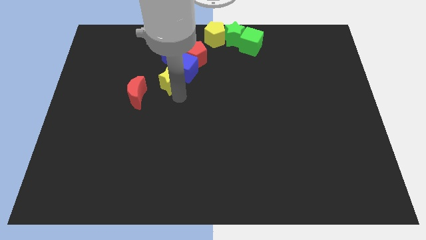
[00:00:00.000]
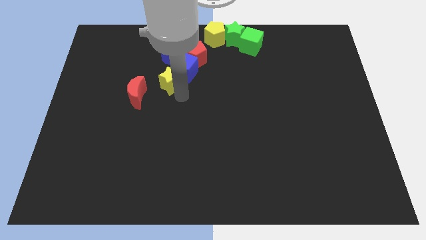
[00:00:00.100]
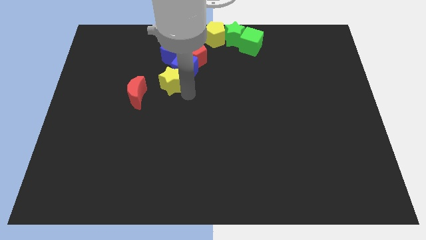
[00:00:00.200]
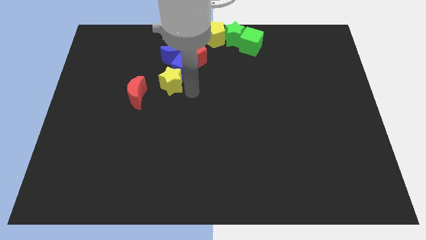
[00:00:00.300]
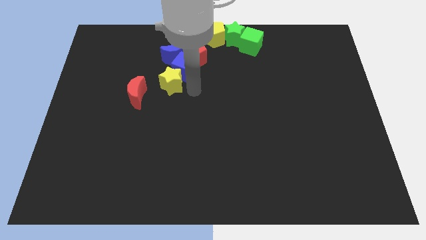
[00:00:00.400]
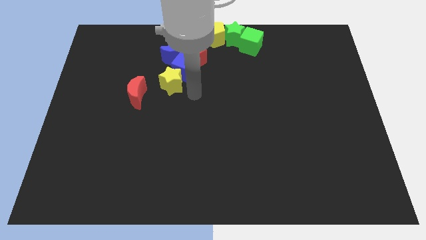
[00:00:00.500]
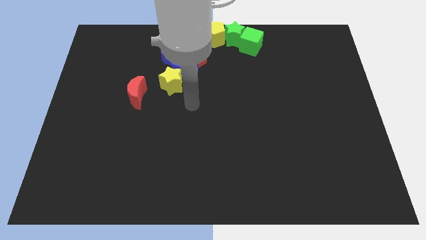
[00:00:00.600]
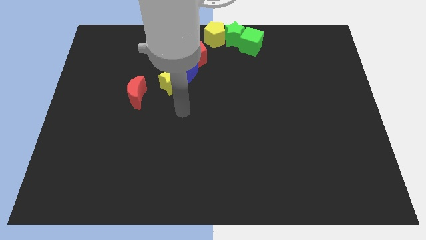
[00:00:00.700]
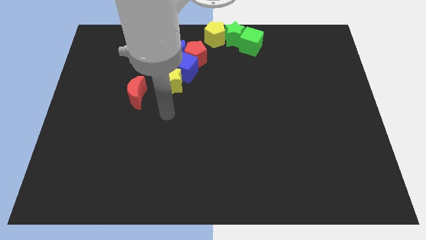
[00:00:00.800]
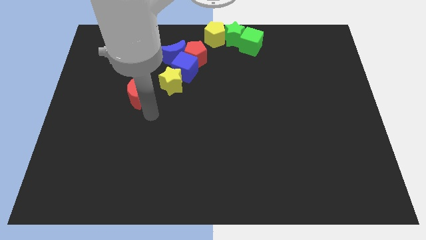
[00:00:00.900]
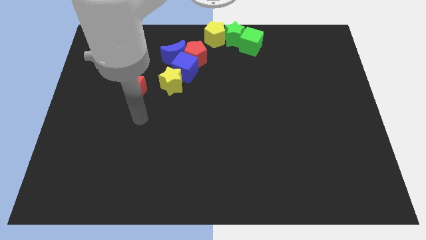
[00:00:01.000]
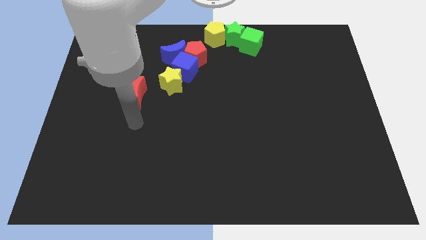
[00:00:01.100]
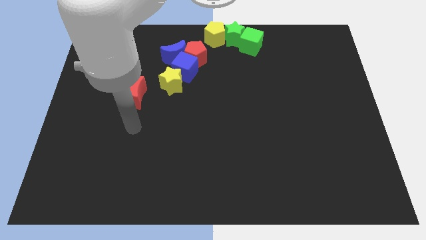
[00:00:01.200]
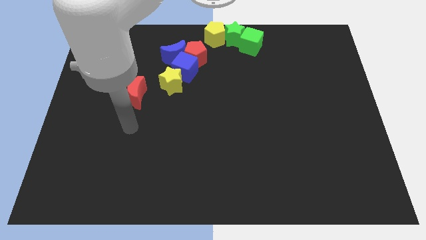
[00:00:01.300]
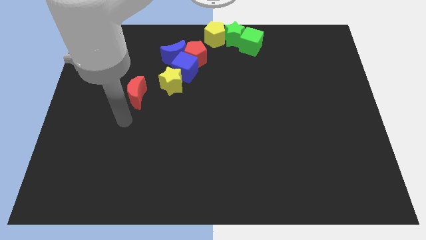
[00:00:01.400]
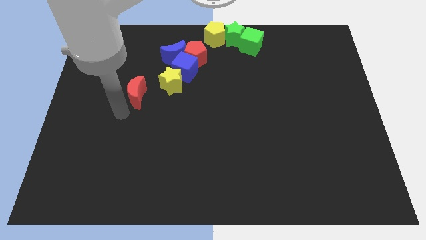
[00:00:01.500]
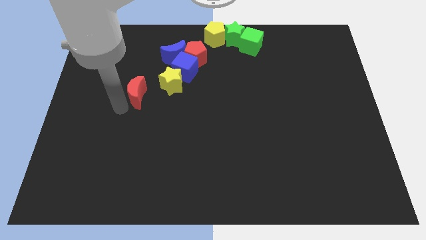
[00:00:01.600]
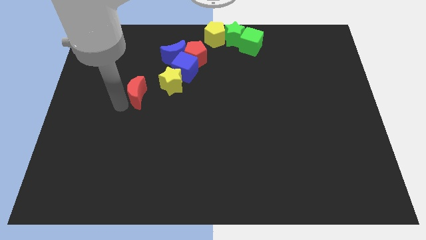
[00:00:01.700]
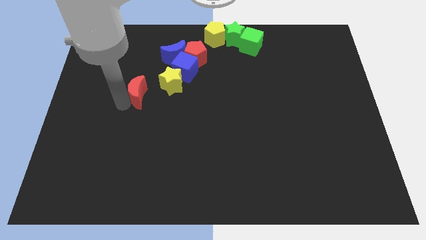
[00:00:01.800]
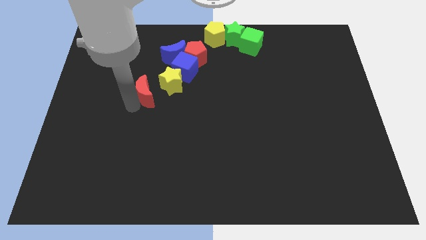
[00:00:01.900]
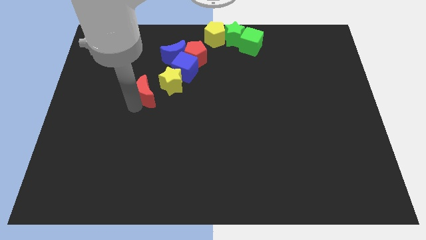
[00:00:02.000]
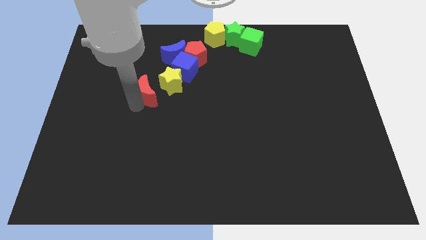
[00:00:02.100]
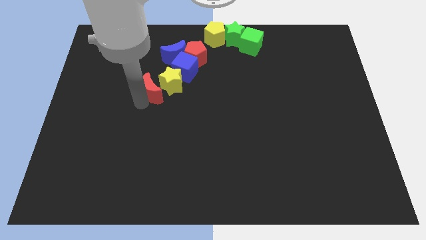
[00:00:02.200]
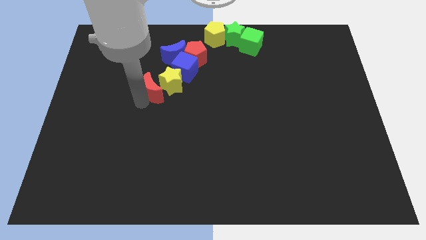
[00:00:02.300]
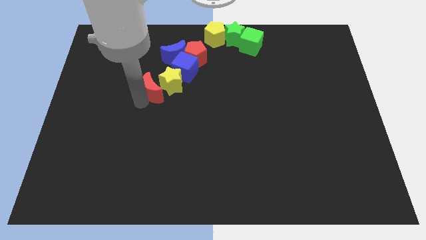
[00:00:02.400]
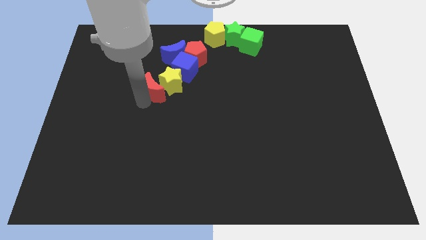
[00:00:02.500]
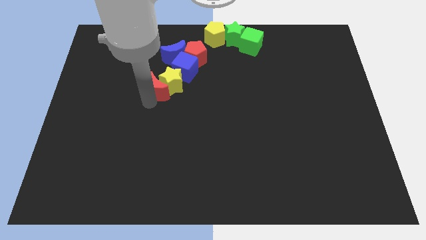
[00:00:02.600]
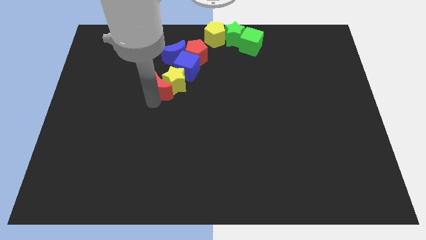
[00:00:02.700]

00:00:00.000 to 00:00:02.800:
put the red moon at the bottom left side of yellow star

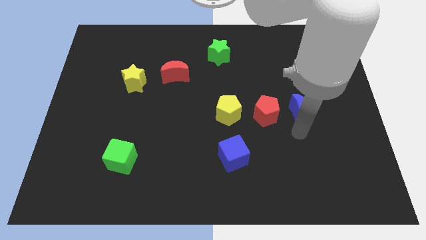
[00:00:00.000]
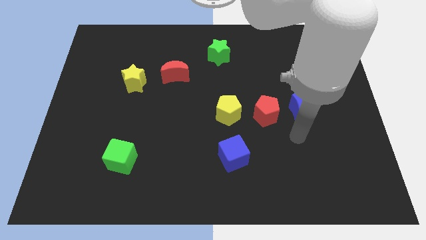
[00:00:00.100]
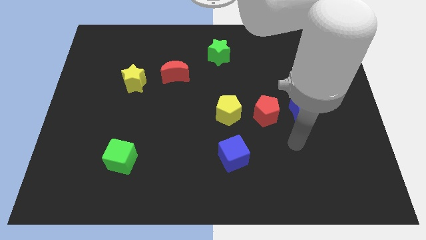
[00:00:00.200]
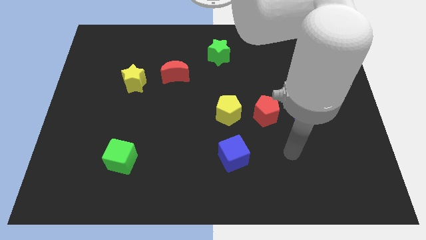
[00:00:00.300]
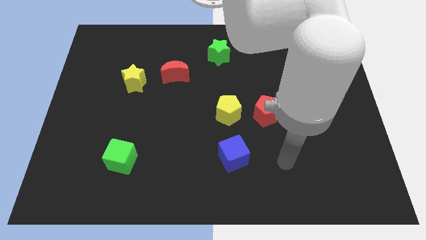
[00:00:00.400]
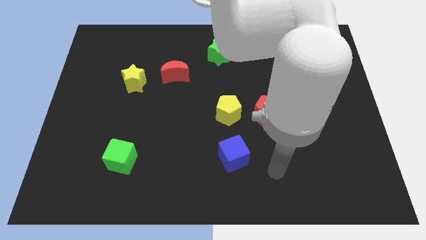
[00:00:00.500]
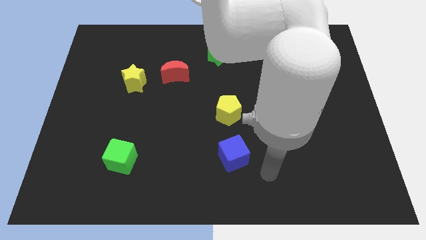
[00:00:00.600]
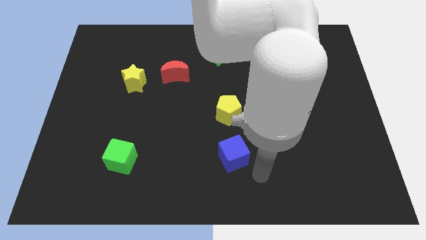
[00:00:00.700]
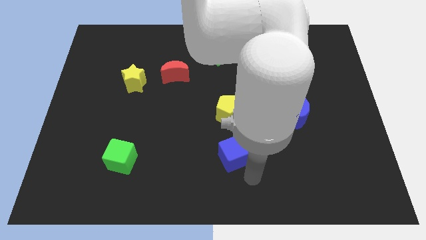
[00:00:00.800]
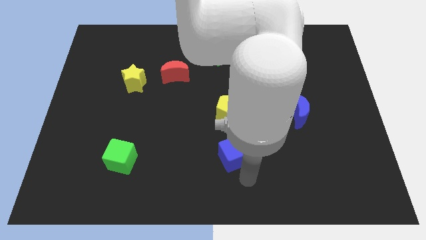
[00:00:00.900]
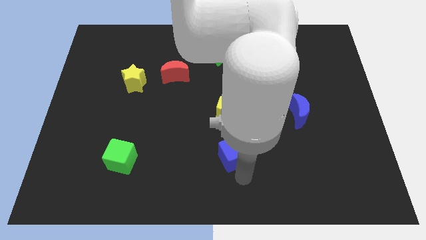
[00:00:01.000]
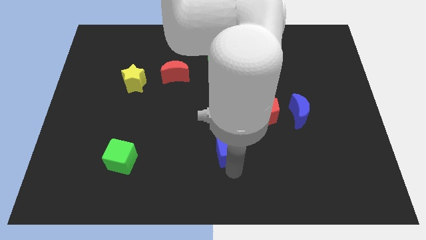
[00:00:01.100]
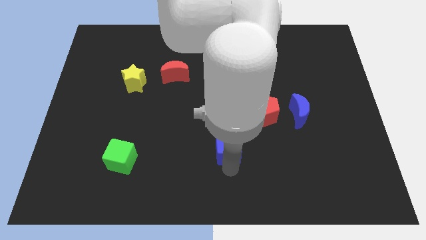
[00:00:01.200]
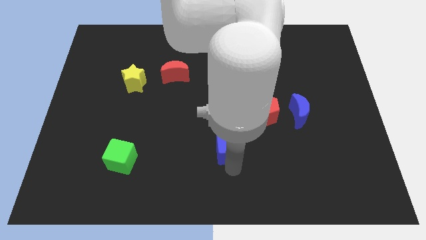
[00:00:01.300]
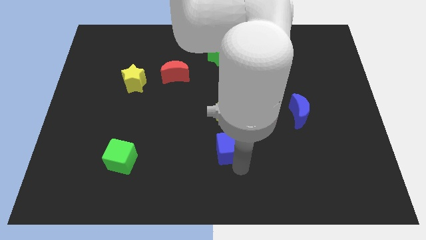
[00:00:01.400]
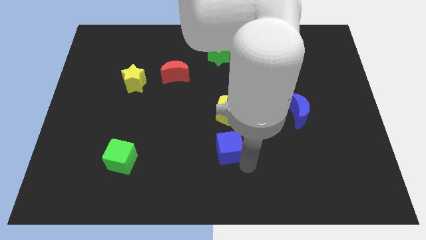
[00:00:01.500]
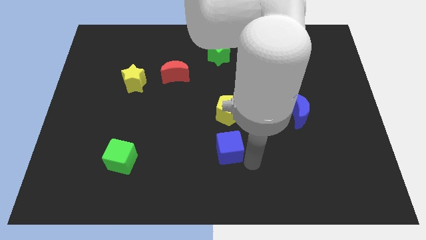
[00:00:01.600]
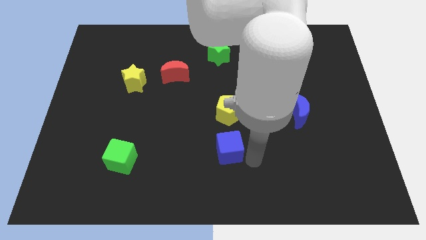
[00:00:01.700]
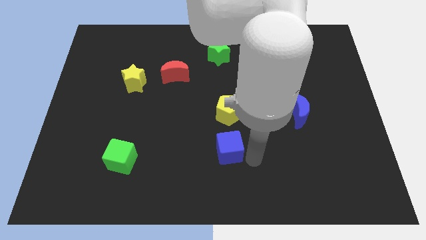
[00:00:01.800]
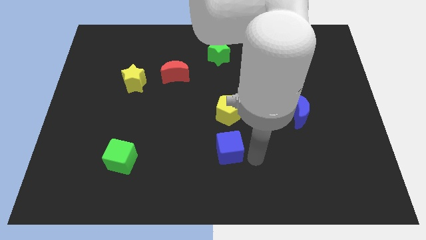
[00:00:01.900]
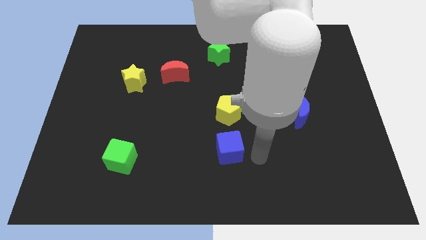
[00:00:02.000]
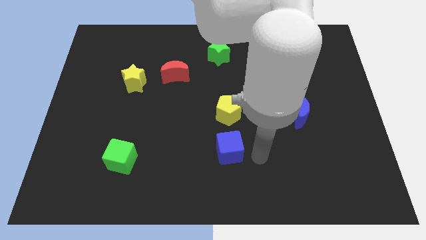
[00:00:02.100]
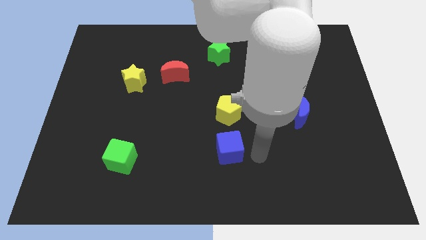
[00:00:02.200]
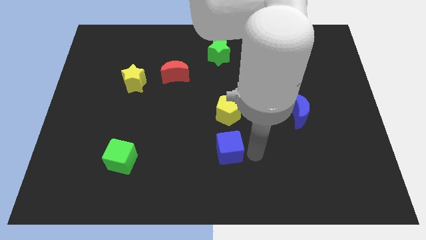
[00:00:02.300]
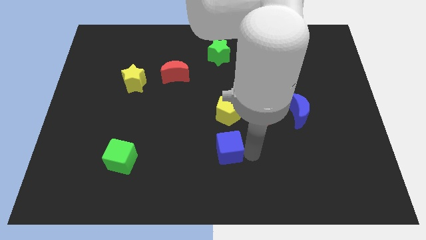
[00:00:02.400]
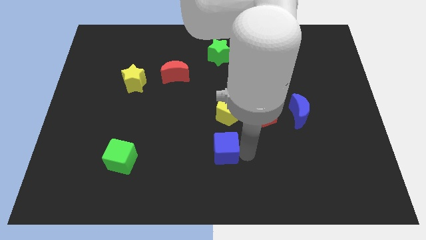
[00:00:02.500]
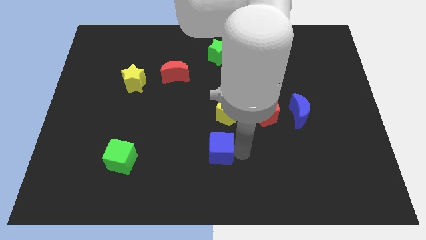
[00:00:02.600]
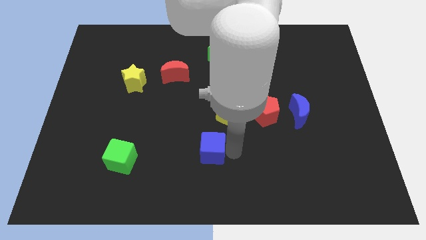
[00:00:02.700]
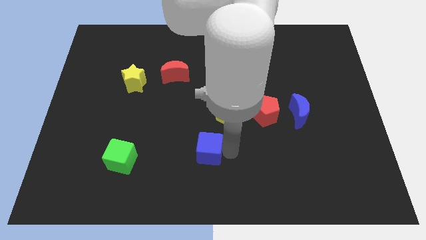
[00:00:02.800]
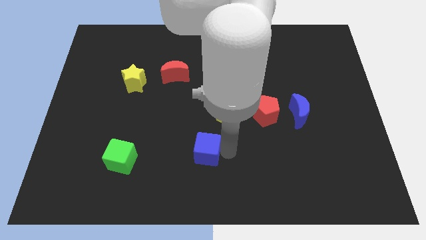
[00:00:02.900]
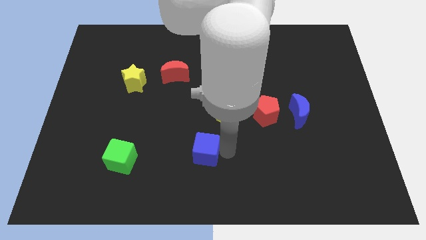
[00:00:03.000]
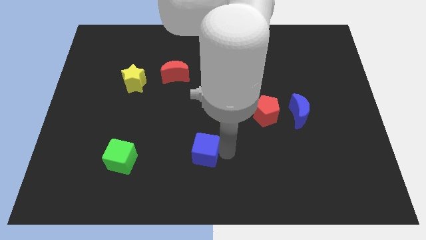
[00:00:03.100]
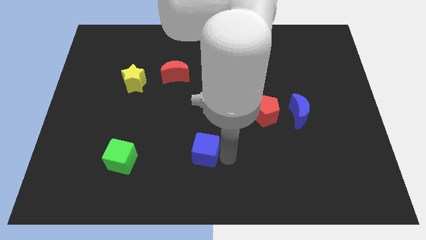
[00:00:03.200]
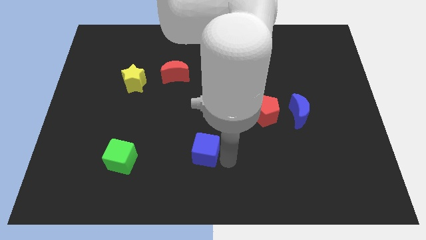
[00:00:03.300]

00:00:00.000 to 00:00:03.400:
slightly move the blue cube towards the left

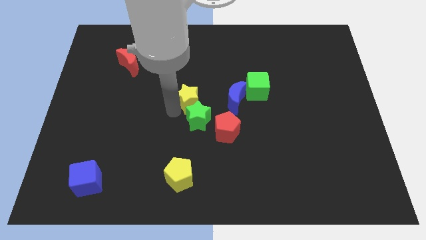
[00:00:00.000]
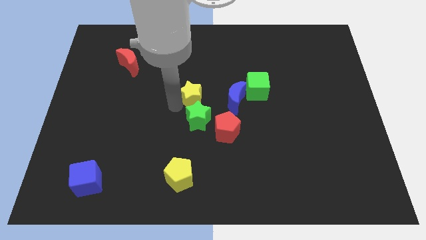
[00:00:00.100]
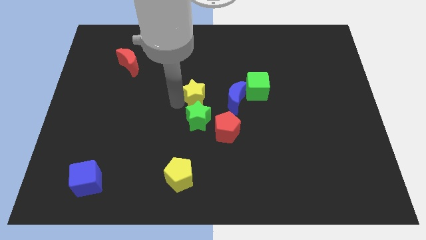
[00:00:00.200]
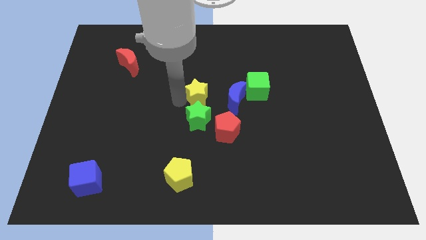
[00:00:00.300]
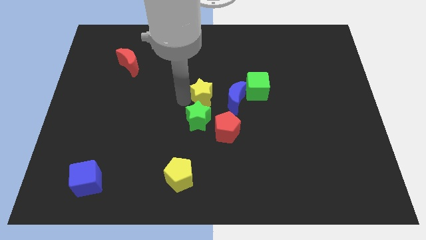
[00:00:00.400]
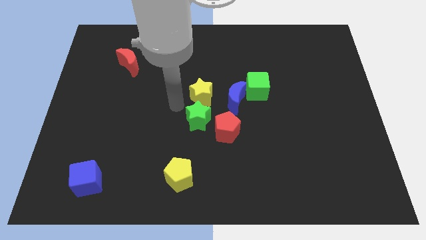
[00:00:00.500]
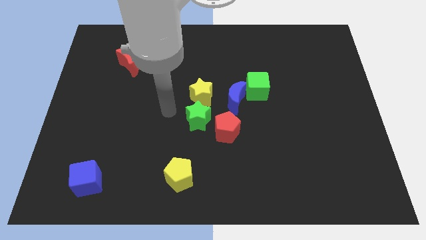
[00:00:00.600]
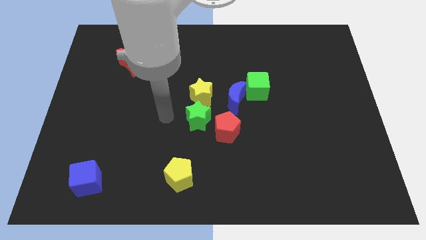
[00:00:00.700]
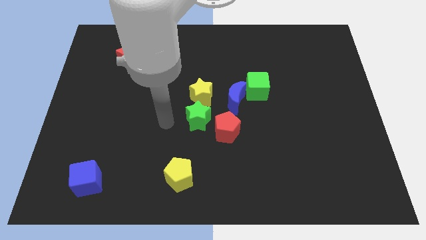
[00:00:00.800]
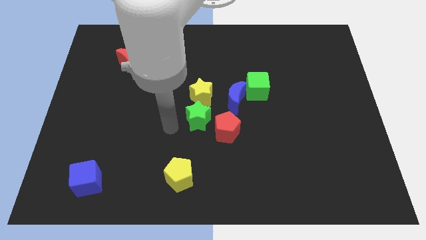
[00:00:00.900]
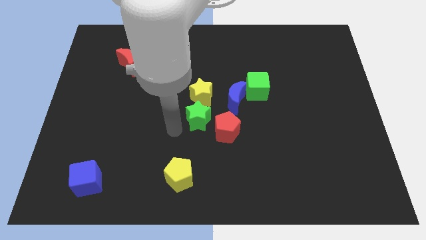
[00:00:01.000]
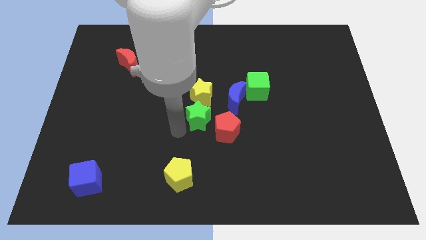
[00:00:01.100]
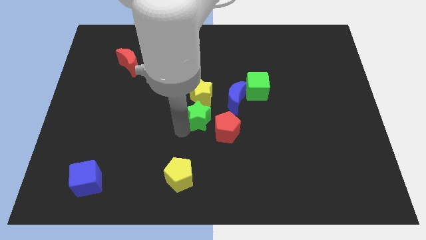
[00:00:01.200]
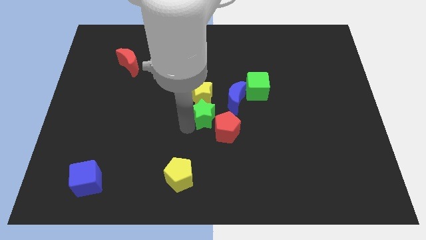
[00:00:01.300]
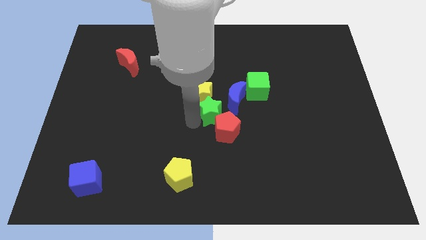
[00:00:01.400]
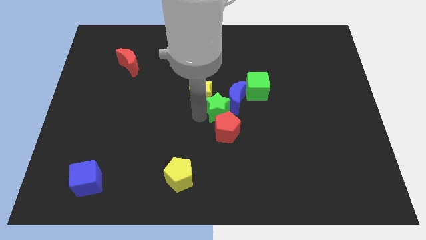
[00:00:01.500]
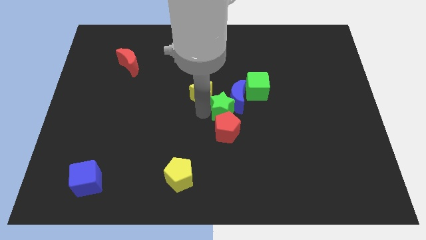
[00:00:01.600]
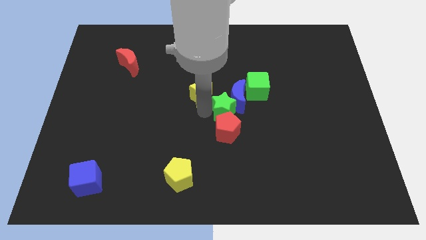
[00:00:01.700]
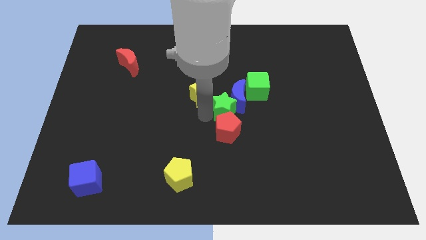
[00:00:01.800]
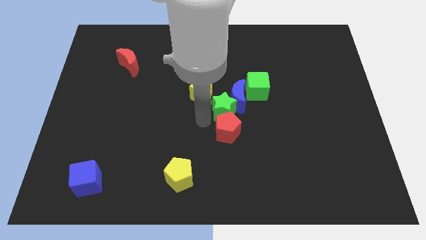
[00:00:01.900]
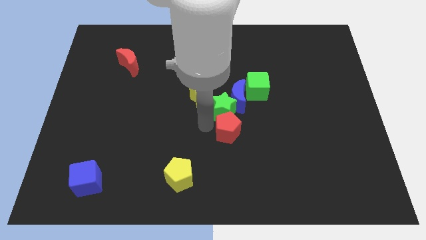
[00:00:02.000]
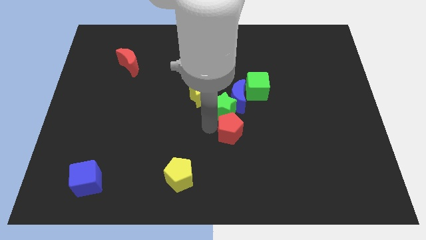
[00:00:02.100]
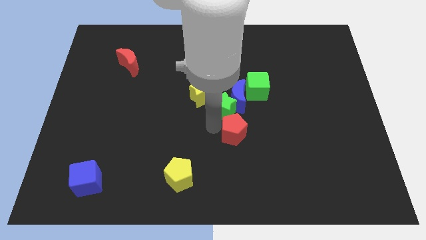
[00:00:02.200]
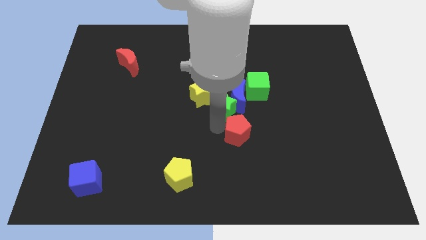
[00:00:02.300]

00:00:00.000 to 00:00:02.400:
move green star closer to blue moon

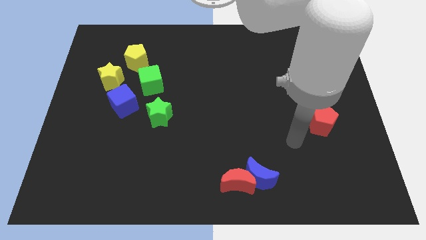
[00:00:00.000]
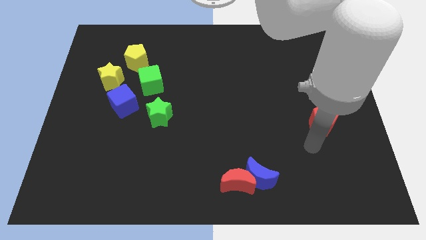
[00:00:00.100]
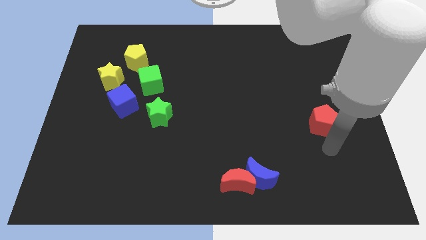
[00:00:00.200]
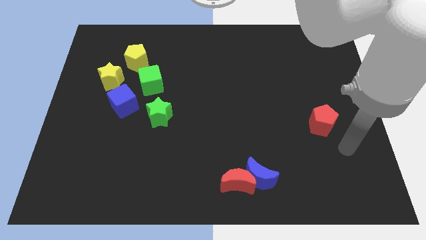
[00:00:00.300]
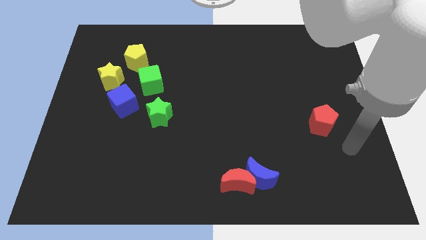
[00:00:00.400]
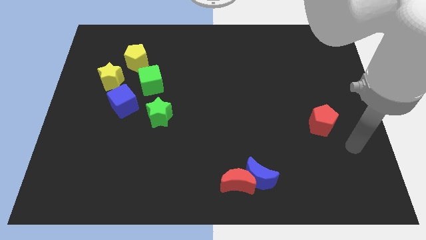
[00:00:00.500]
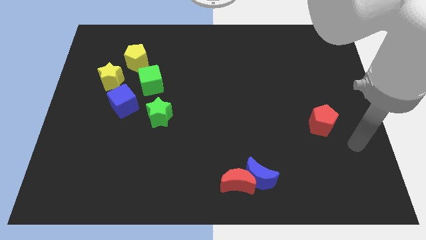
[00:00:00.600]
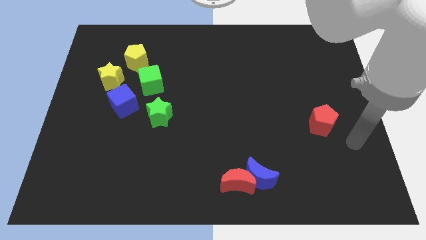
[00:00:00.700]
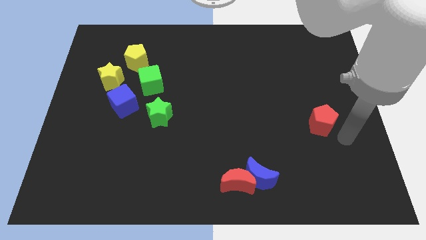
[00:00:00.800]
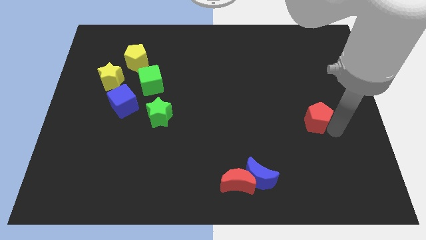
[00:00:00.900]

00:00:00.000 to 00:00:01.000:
go near the red pentagon
